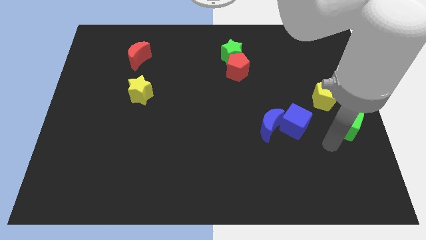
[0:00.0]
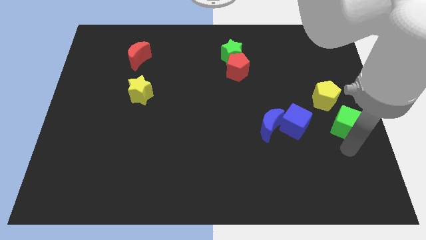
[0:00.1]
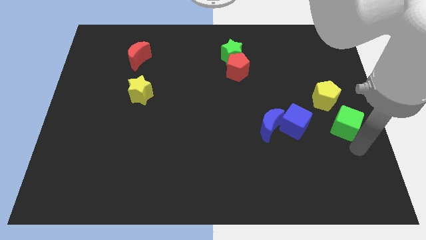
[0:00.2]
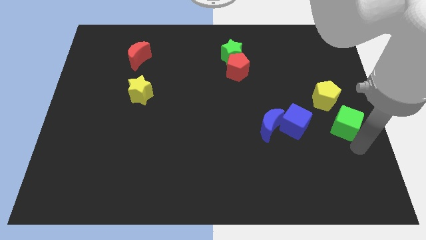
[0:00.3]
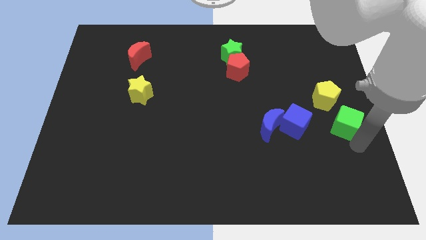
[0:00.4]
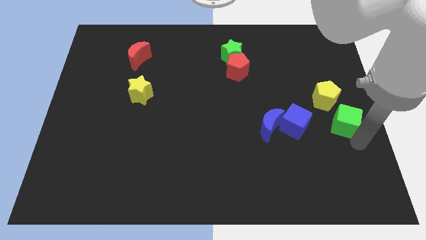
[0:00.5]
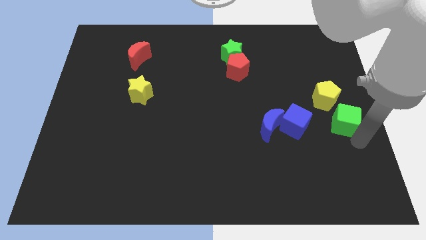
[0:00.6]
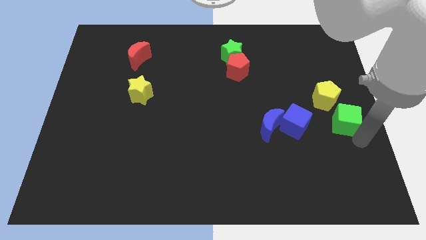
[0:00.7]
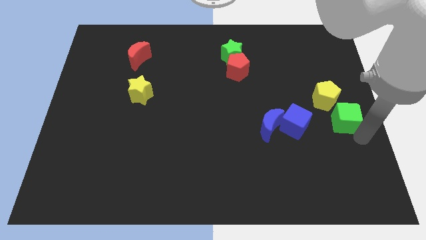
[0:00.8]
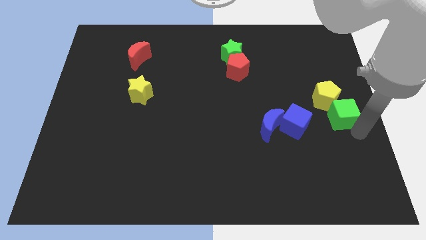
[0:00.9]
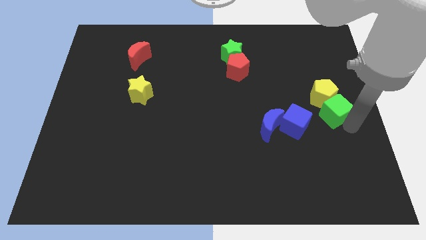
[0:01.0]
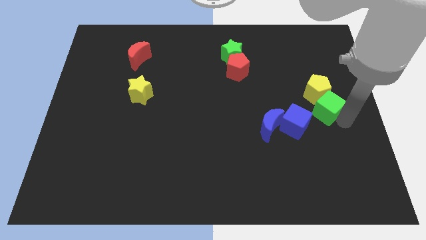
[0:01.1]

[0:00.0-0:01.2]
move the green cube into the bottom of the yellow pentagon

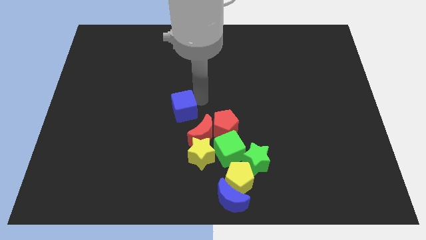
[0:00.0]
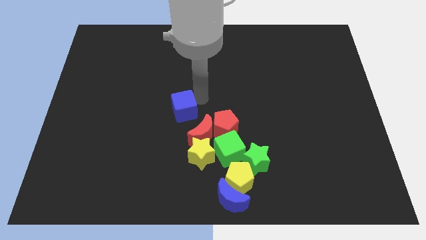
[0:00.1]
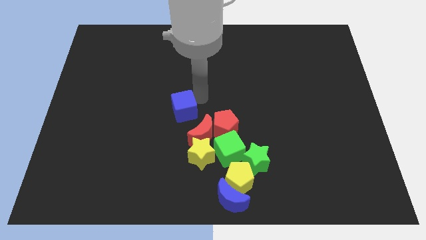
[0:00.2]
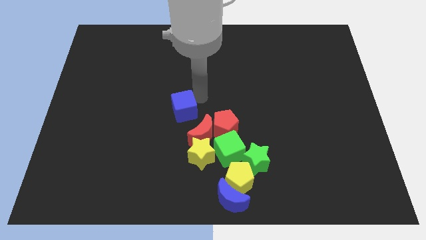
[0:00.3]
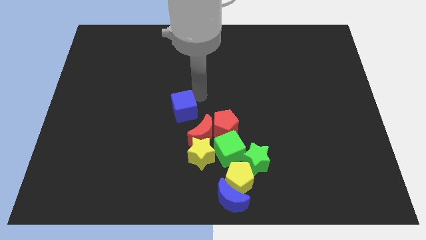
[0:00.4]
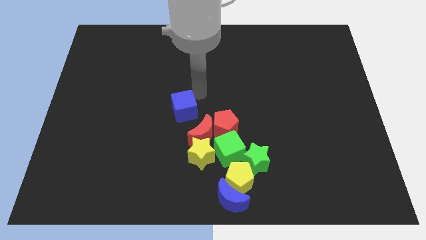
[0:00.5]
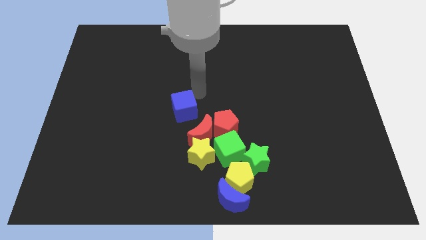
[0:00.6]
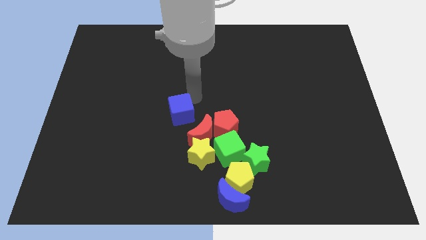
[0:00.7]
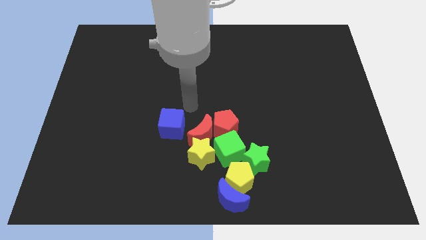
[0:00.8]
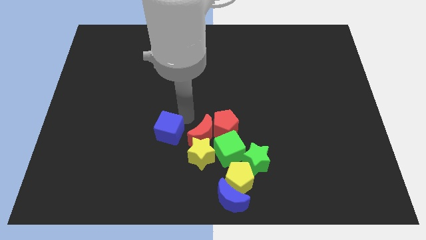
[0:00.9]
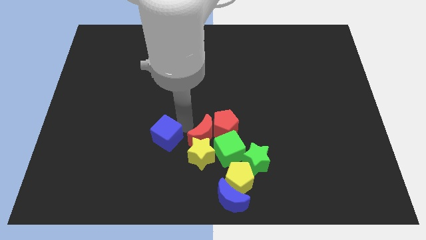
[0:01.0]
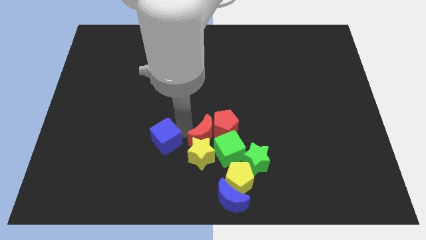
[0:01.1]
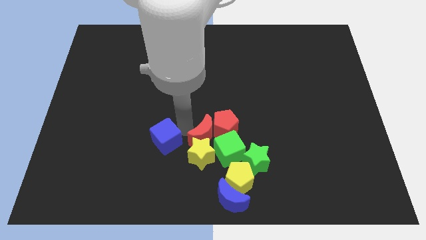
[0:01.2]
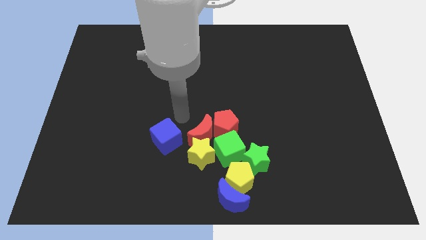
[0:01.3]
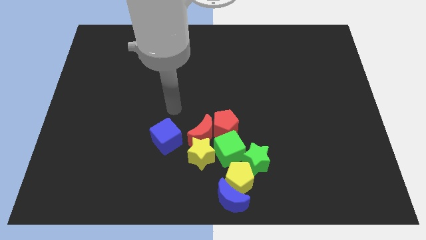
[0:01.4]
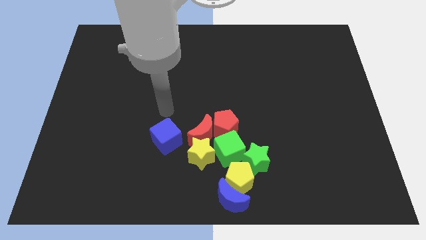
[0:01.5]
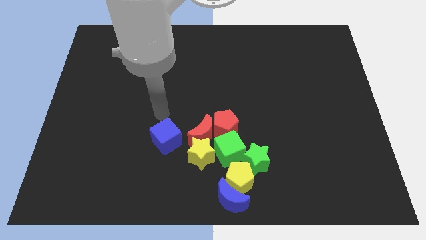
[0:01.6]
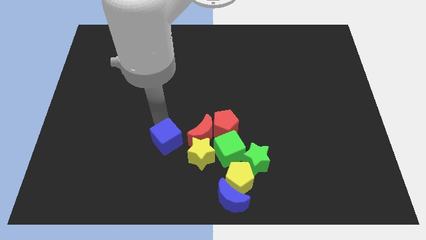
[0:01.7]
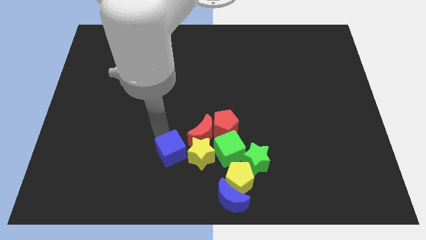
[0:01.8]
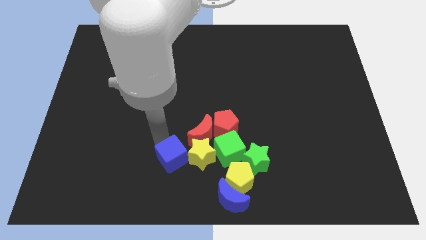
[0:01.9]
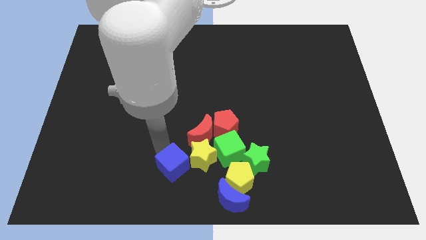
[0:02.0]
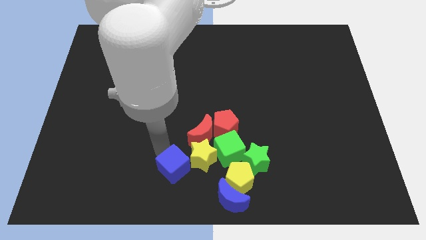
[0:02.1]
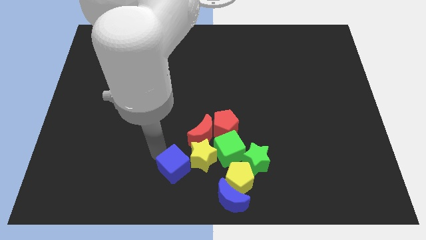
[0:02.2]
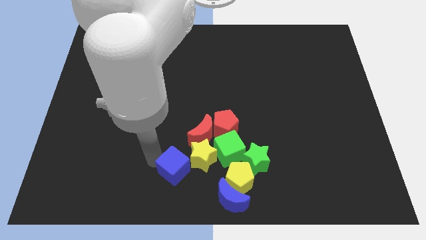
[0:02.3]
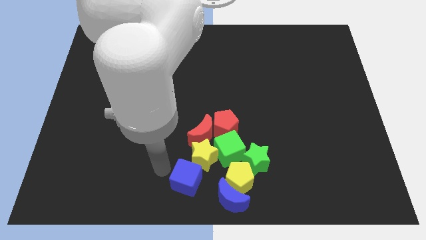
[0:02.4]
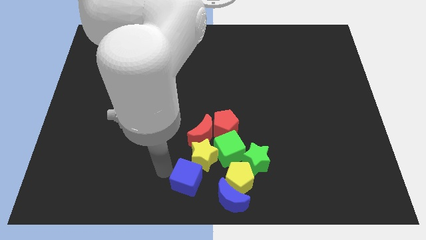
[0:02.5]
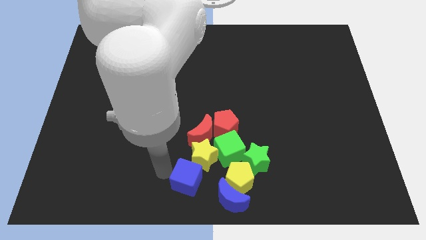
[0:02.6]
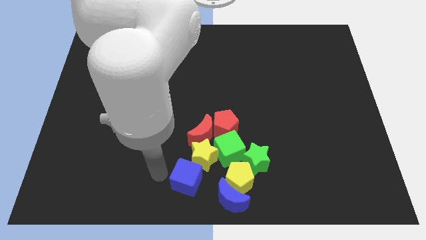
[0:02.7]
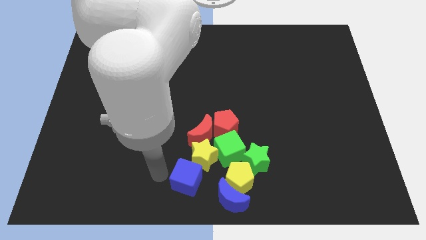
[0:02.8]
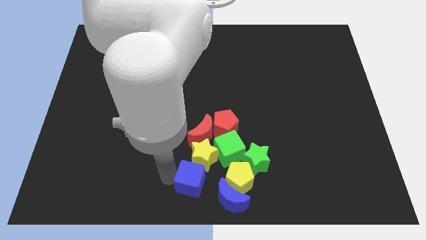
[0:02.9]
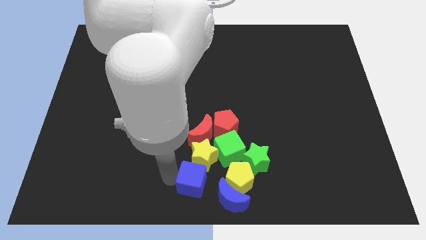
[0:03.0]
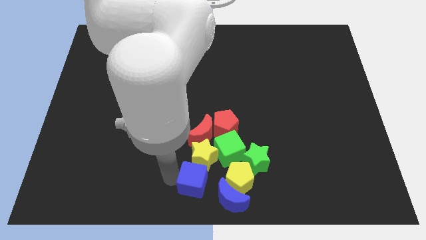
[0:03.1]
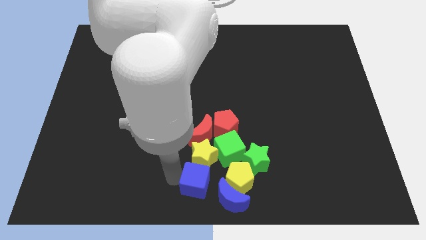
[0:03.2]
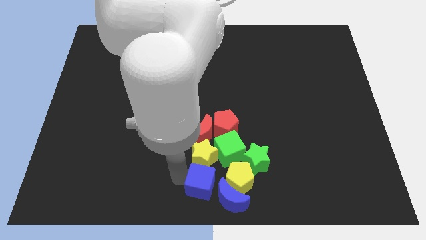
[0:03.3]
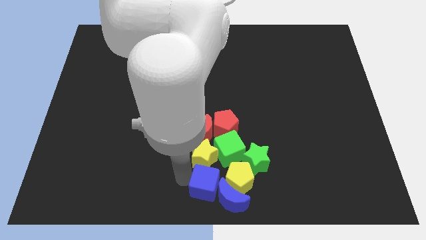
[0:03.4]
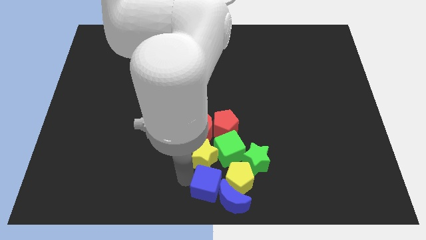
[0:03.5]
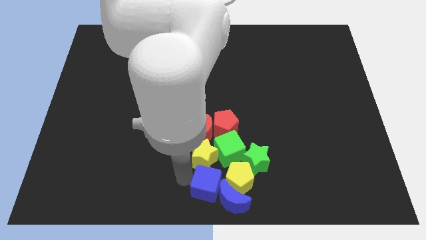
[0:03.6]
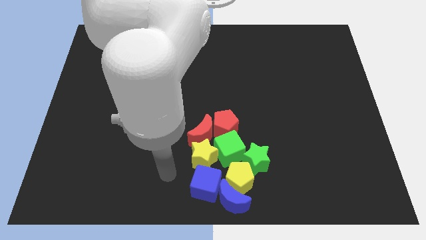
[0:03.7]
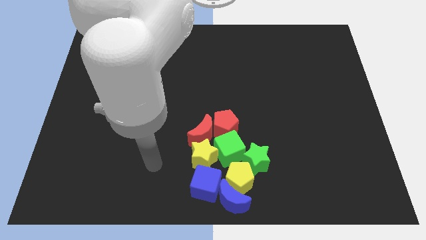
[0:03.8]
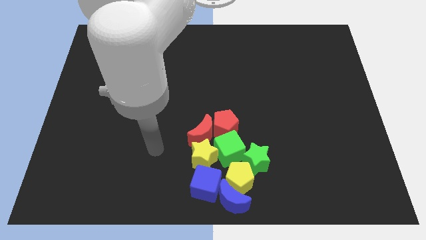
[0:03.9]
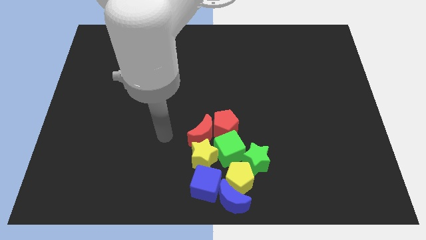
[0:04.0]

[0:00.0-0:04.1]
move blue cube below the yellow star

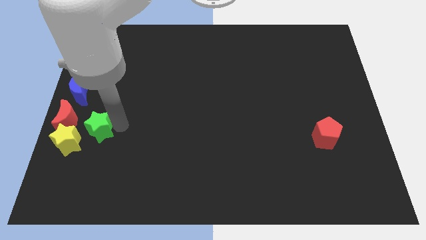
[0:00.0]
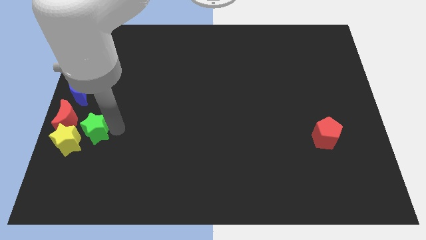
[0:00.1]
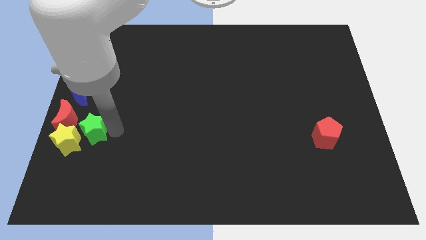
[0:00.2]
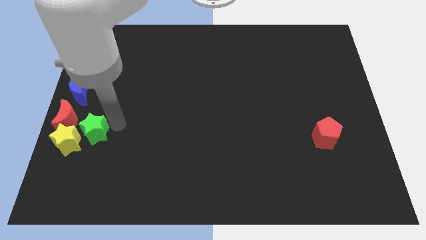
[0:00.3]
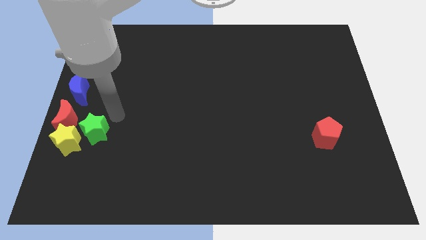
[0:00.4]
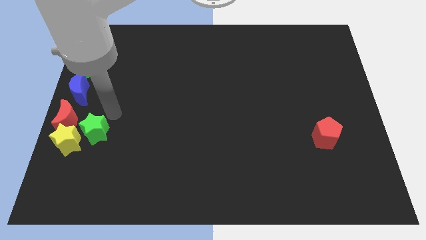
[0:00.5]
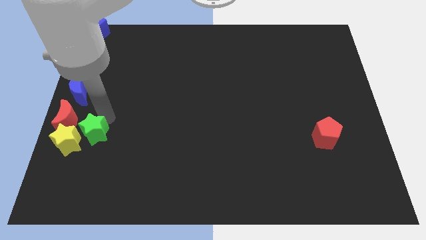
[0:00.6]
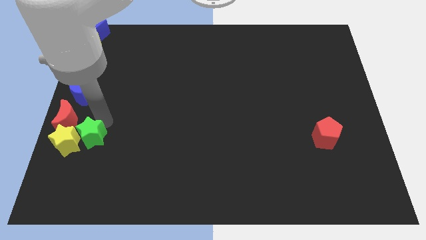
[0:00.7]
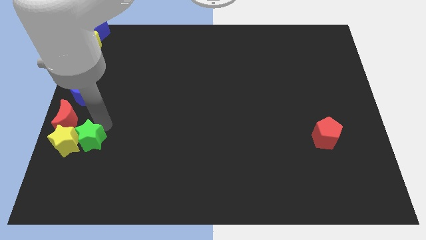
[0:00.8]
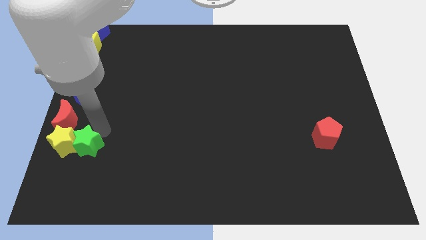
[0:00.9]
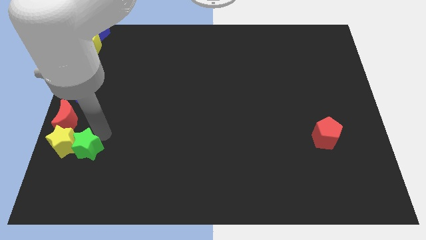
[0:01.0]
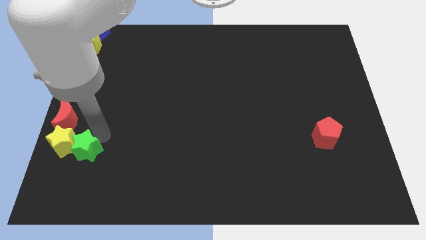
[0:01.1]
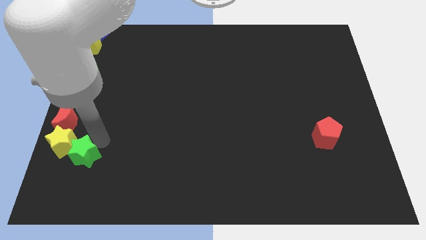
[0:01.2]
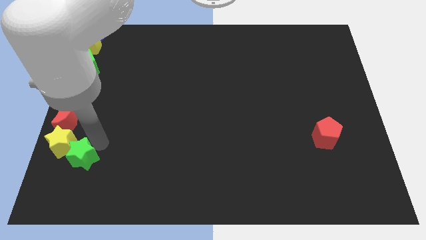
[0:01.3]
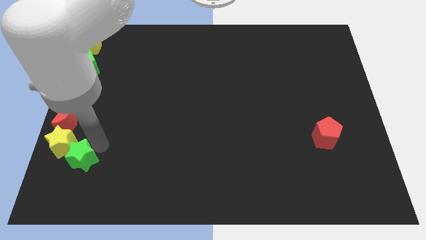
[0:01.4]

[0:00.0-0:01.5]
push the green star into the yellow star

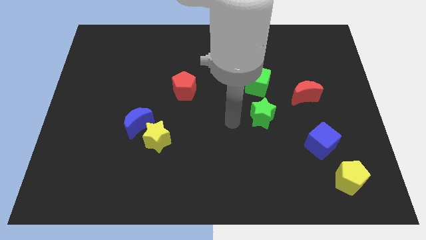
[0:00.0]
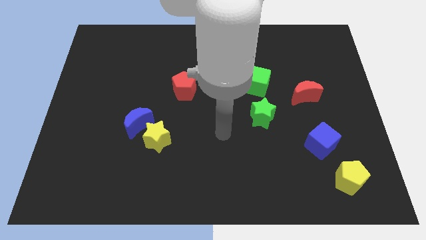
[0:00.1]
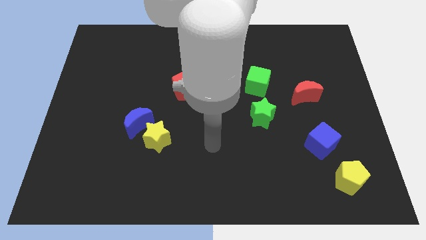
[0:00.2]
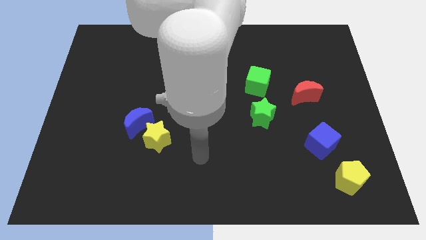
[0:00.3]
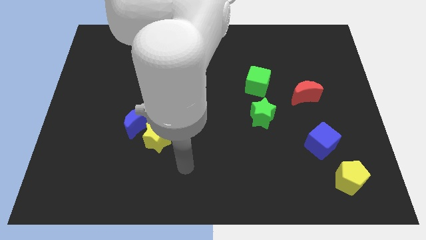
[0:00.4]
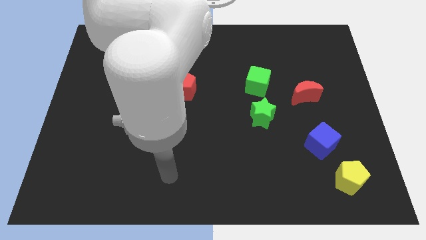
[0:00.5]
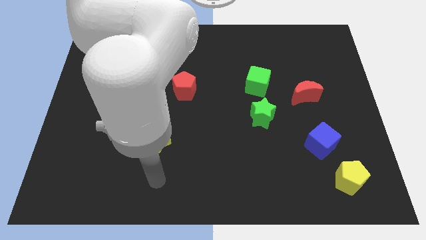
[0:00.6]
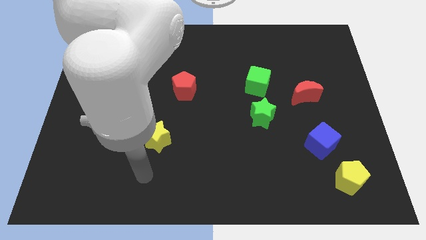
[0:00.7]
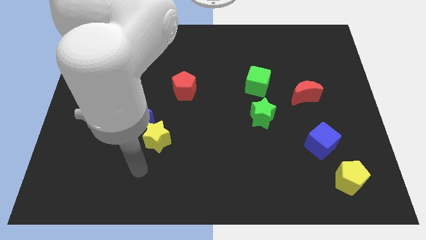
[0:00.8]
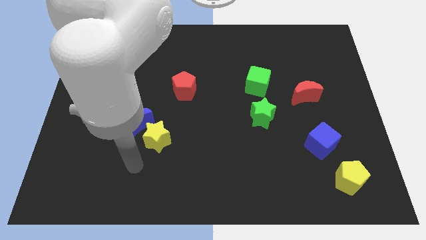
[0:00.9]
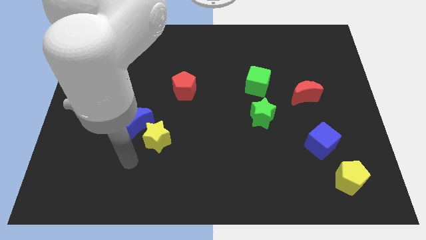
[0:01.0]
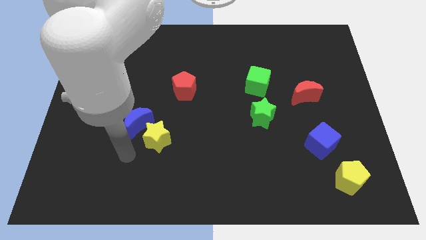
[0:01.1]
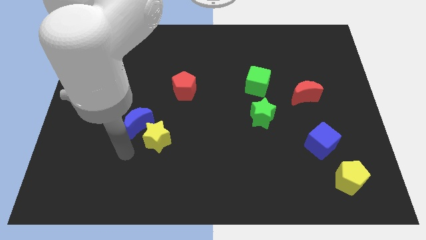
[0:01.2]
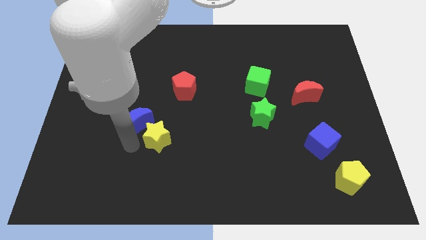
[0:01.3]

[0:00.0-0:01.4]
put your arm to the left side of yellow star

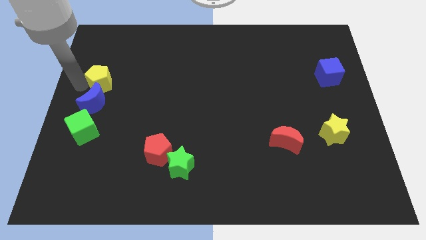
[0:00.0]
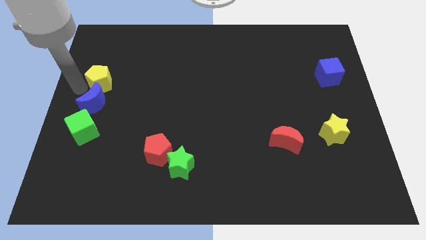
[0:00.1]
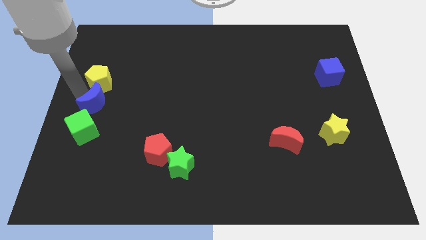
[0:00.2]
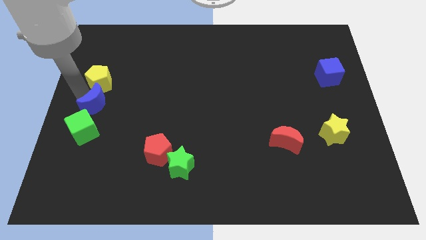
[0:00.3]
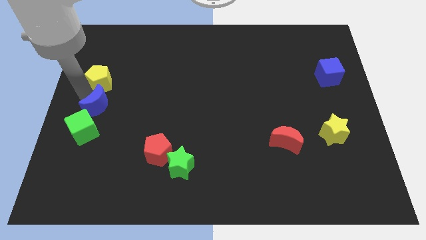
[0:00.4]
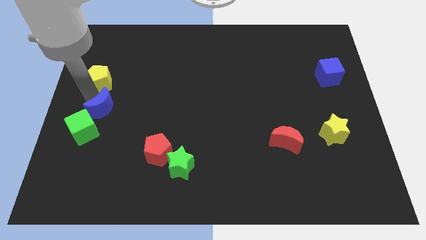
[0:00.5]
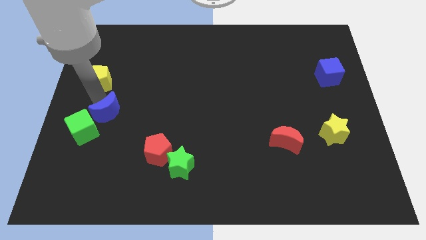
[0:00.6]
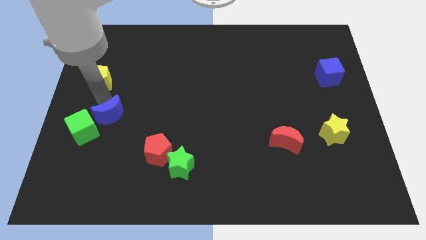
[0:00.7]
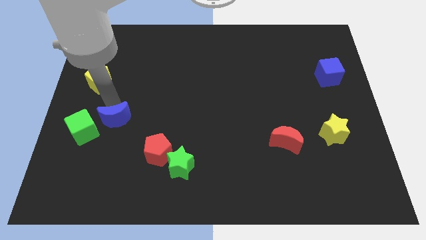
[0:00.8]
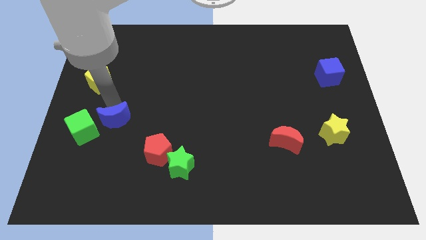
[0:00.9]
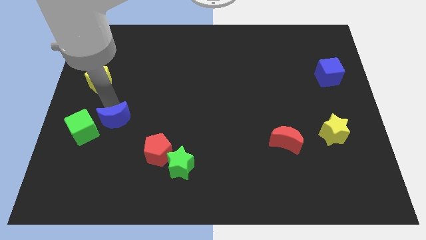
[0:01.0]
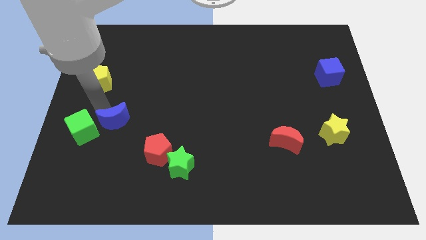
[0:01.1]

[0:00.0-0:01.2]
move the blue crescent to the right of the green cube
